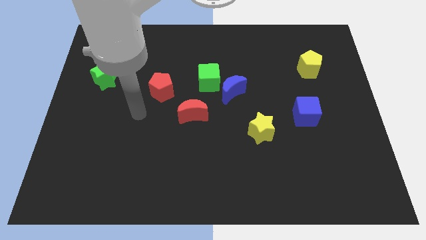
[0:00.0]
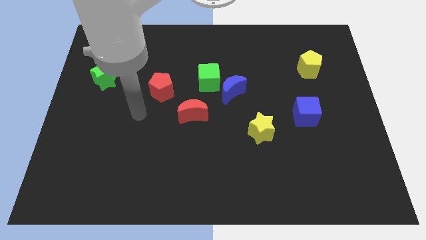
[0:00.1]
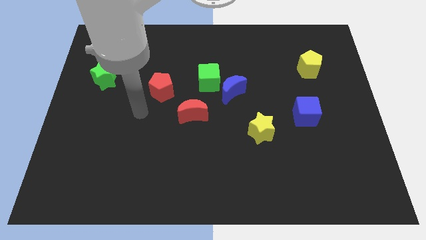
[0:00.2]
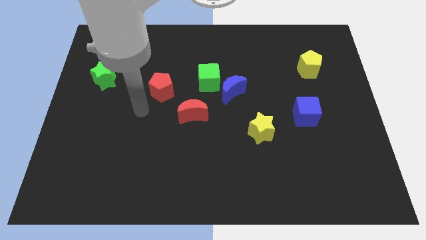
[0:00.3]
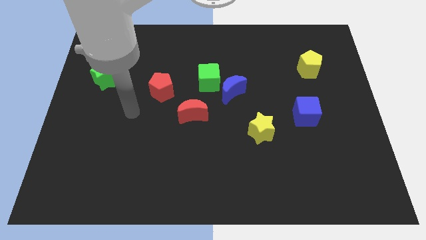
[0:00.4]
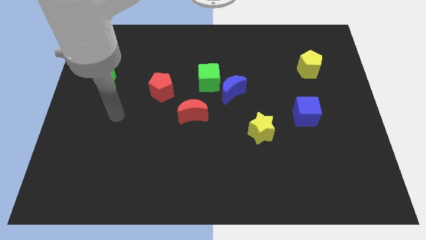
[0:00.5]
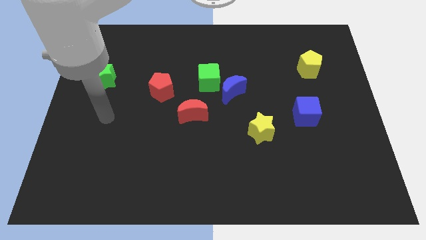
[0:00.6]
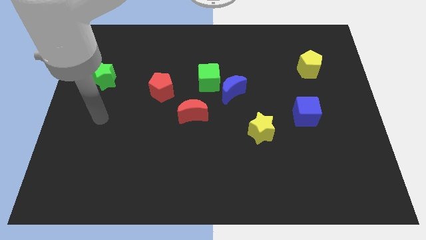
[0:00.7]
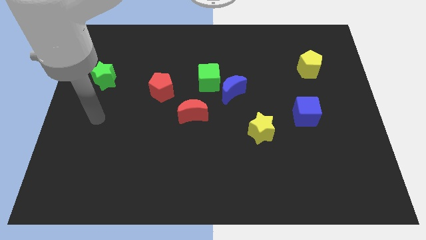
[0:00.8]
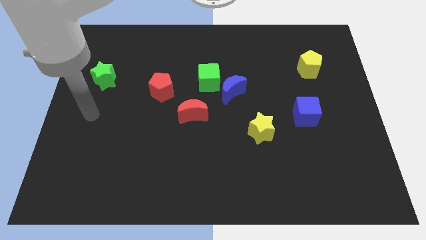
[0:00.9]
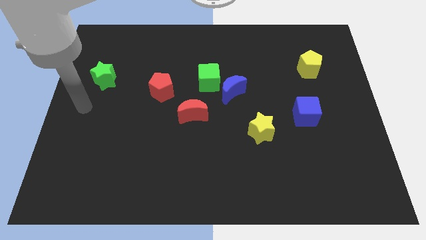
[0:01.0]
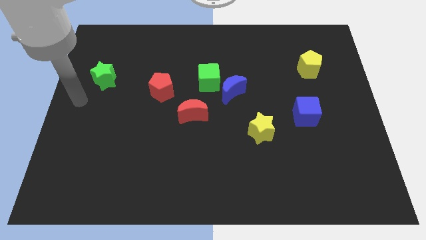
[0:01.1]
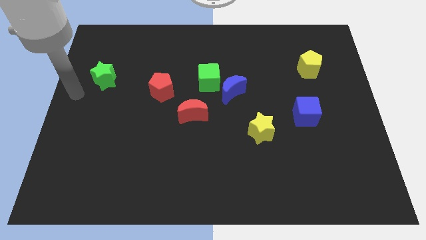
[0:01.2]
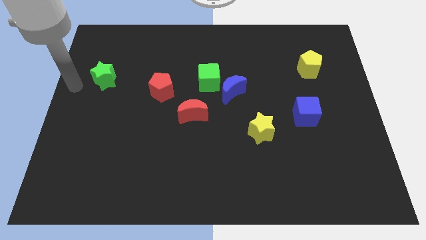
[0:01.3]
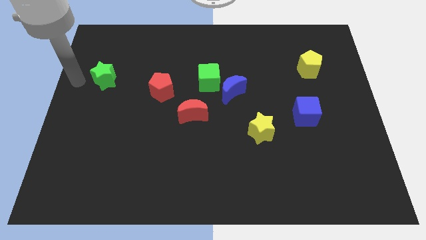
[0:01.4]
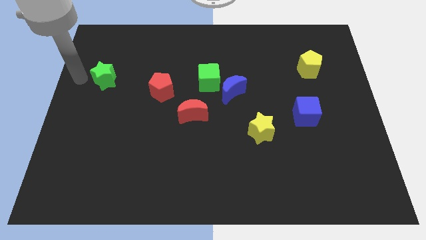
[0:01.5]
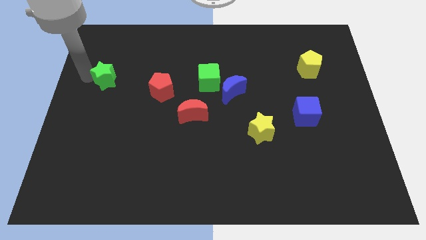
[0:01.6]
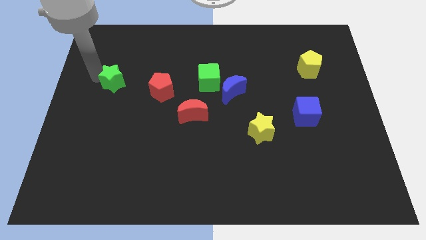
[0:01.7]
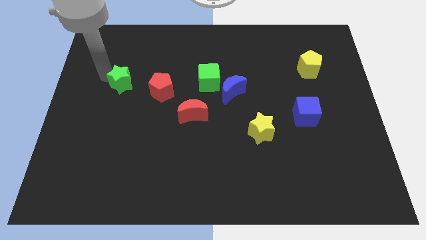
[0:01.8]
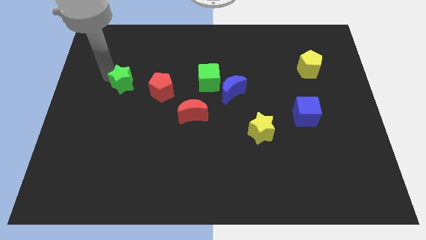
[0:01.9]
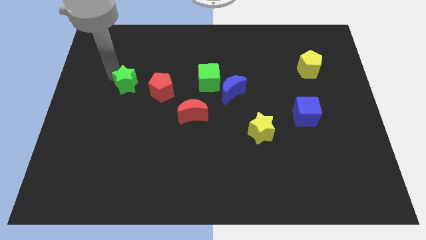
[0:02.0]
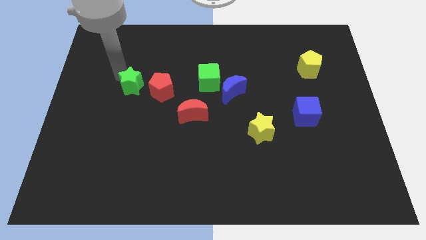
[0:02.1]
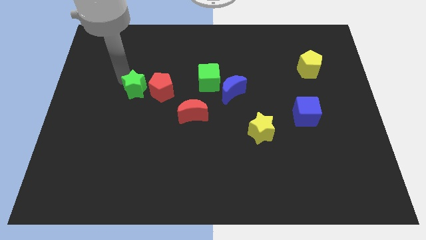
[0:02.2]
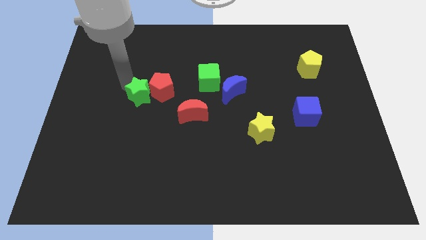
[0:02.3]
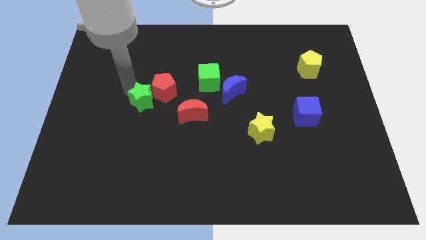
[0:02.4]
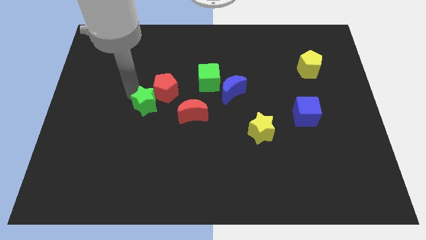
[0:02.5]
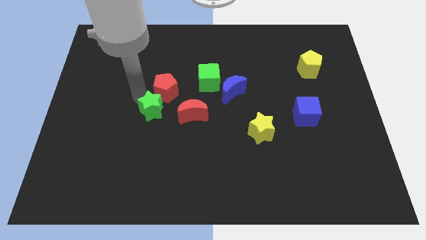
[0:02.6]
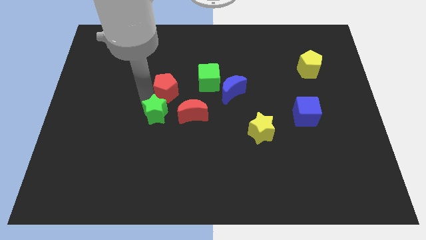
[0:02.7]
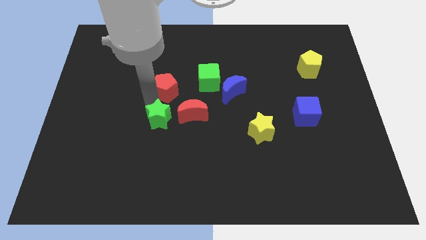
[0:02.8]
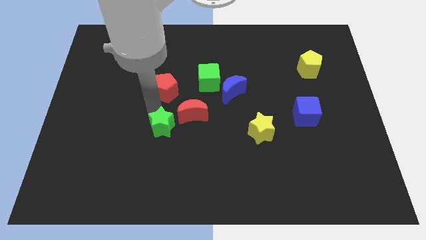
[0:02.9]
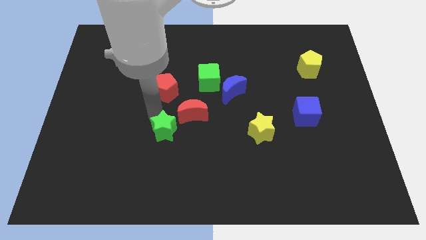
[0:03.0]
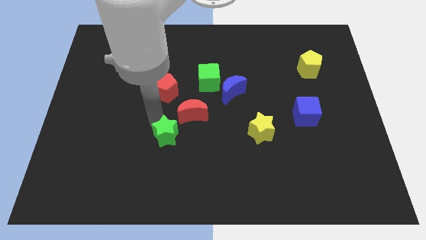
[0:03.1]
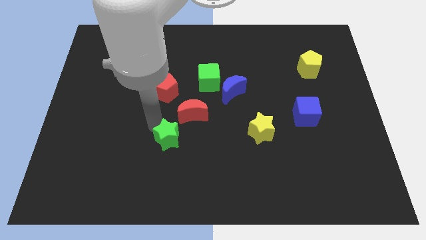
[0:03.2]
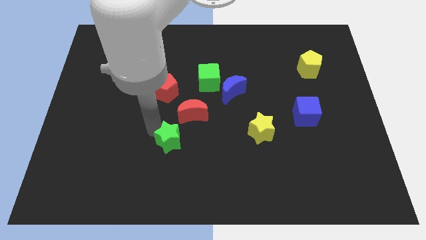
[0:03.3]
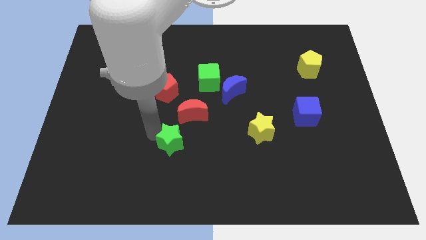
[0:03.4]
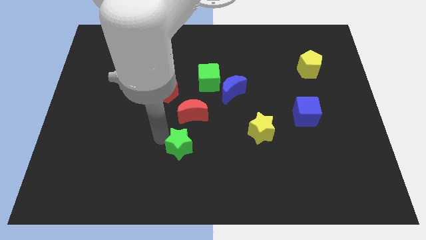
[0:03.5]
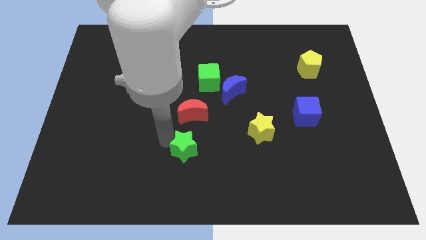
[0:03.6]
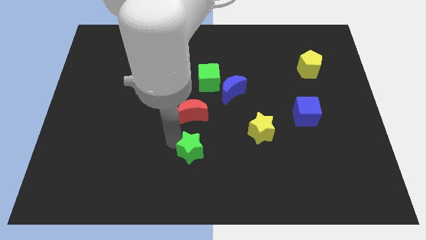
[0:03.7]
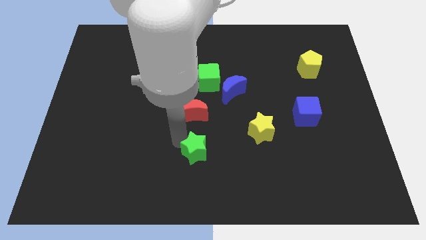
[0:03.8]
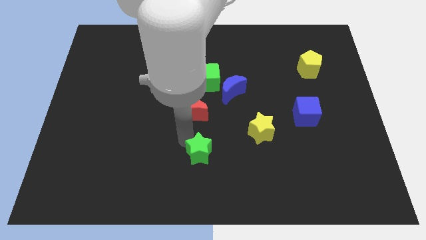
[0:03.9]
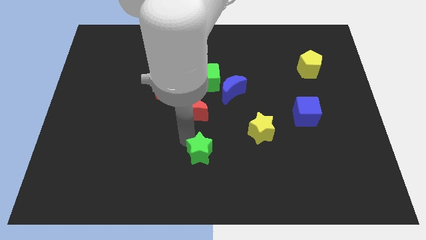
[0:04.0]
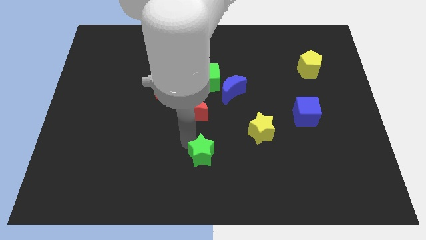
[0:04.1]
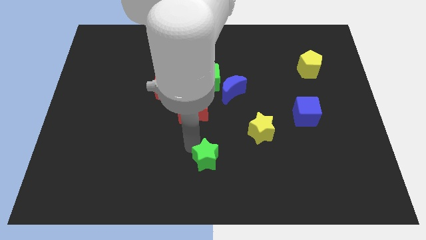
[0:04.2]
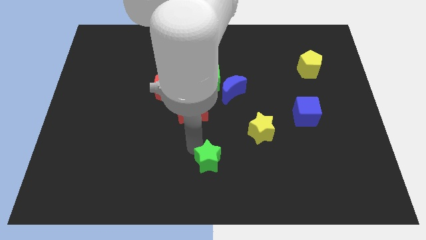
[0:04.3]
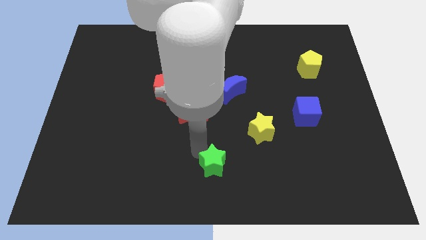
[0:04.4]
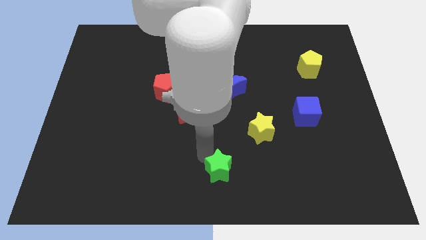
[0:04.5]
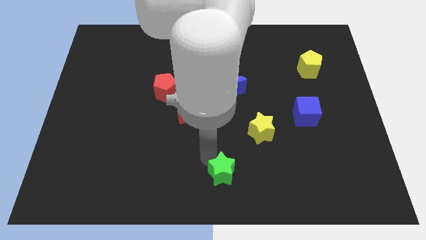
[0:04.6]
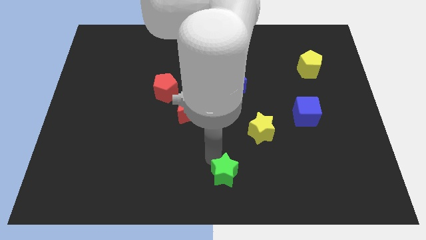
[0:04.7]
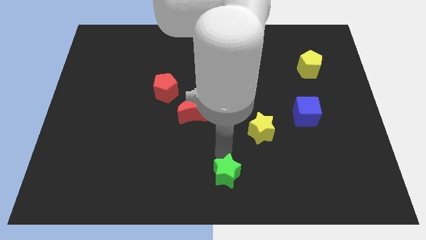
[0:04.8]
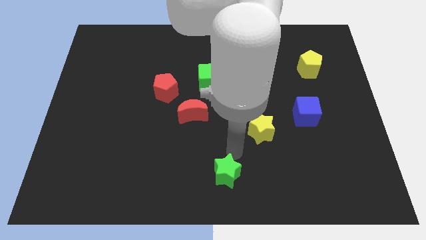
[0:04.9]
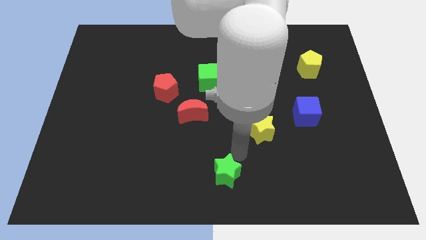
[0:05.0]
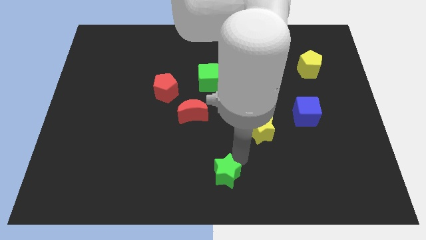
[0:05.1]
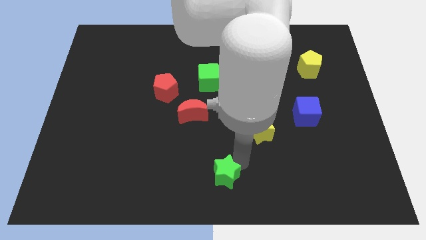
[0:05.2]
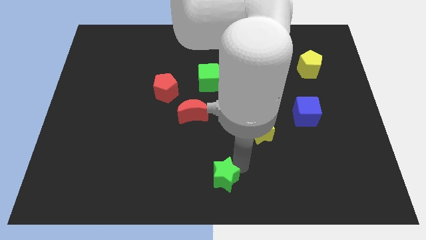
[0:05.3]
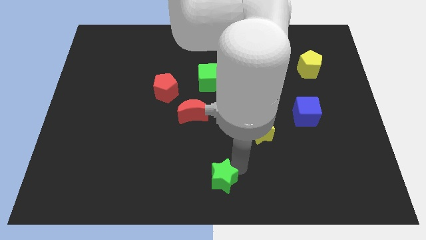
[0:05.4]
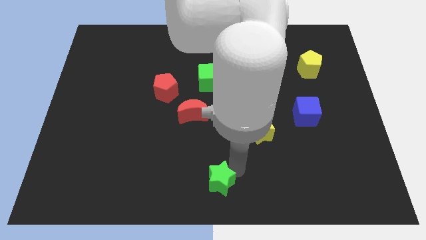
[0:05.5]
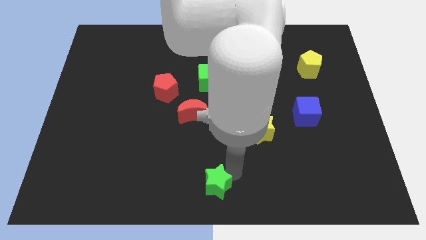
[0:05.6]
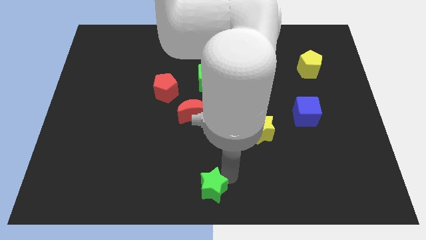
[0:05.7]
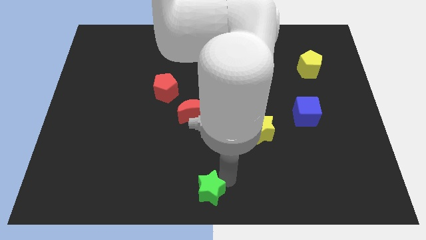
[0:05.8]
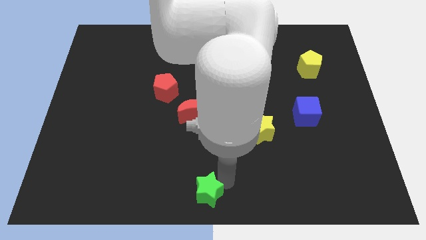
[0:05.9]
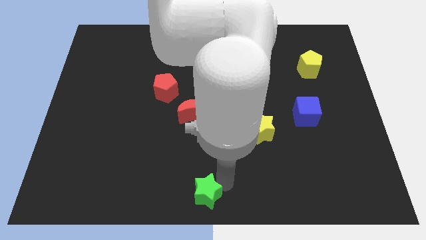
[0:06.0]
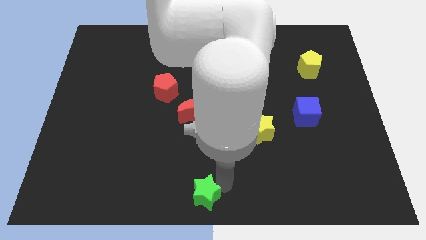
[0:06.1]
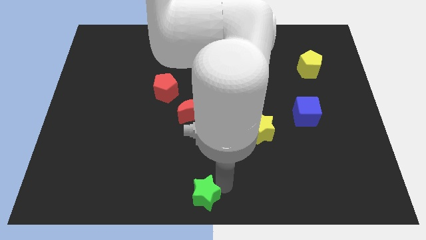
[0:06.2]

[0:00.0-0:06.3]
push the green star to the bottom center of the board

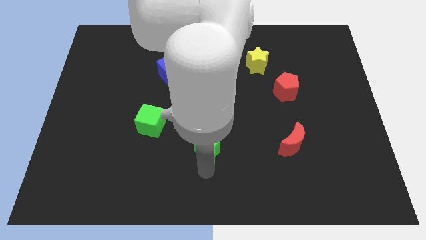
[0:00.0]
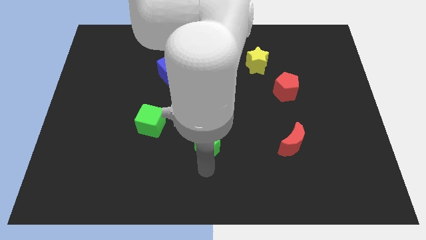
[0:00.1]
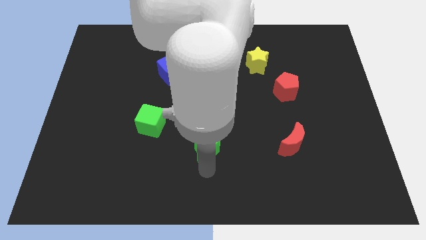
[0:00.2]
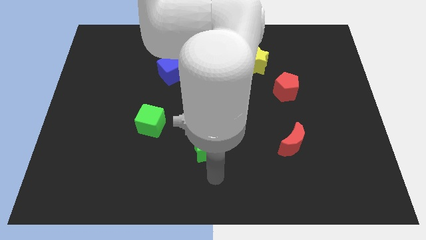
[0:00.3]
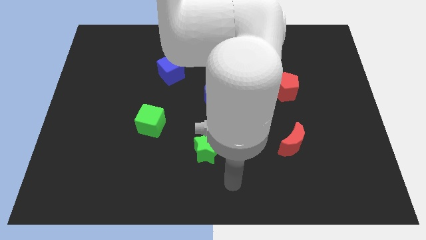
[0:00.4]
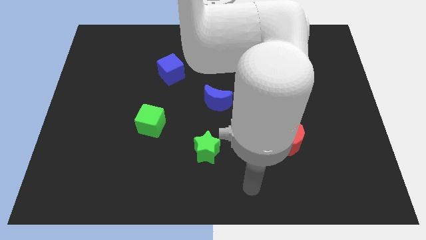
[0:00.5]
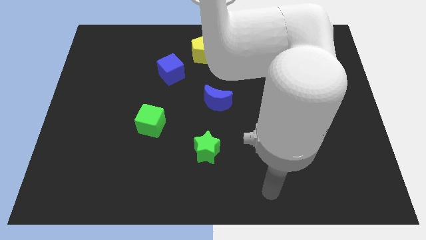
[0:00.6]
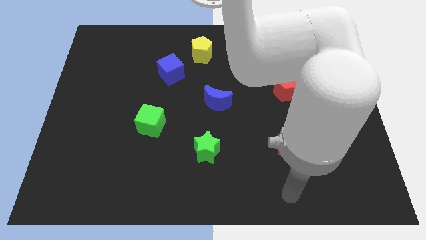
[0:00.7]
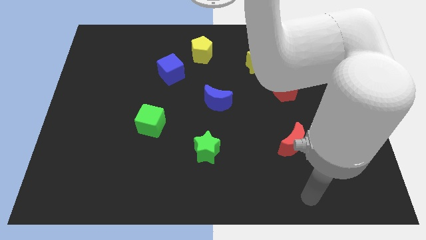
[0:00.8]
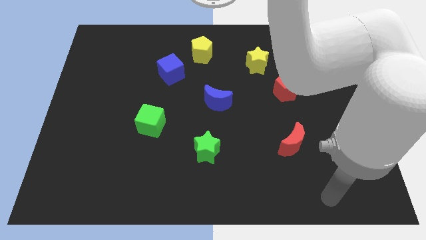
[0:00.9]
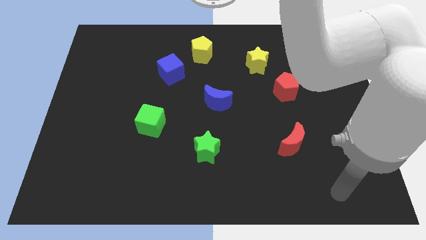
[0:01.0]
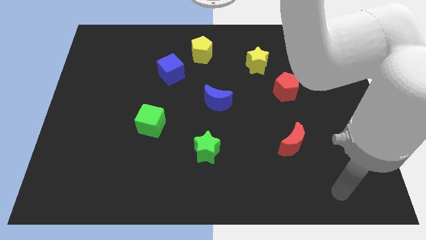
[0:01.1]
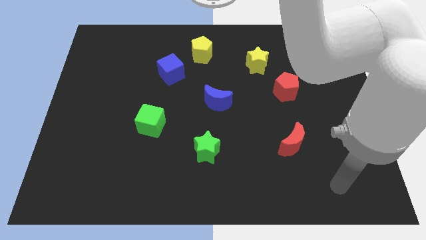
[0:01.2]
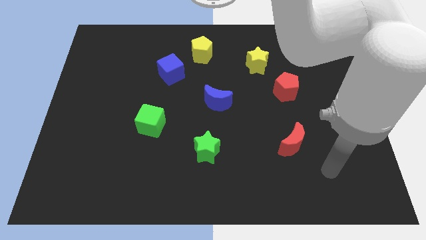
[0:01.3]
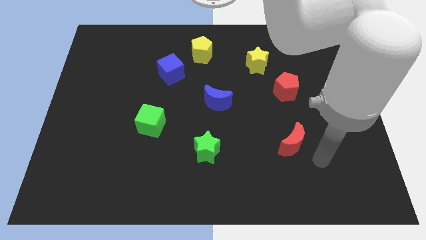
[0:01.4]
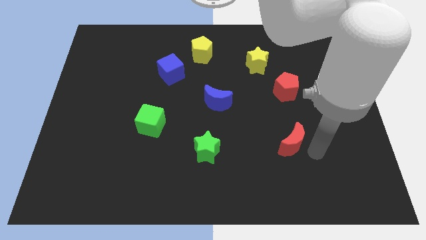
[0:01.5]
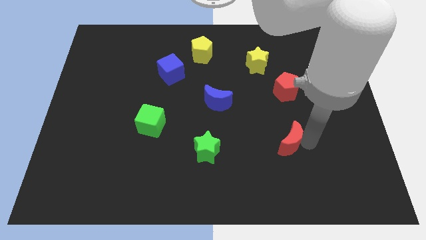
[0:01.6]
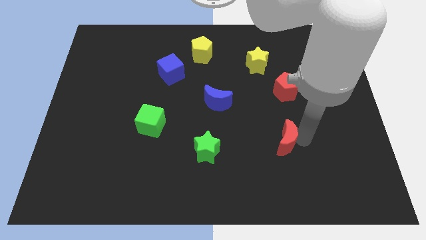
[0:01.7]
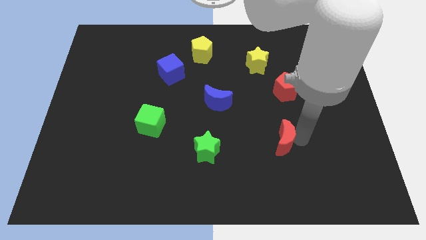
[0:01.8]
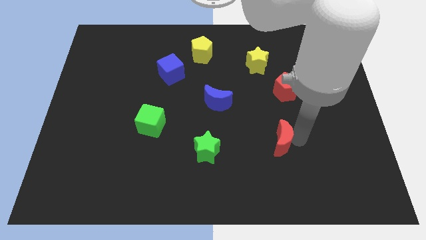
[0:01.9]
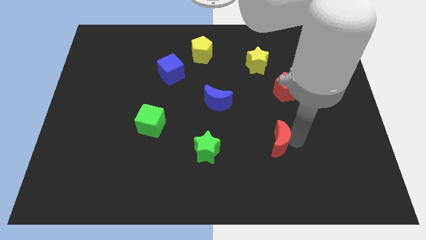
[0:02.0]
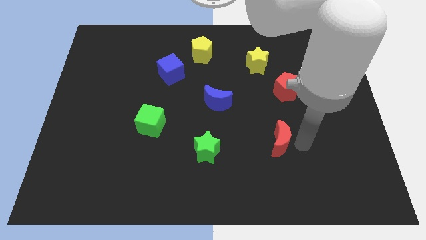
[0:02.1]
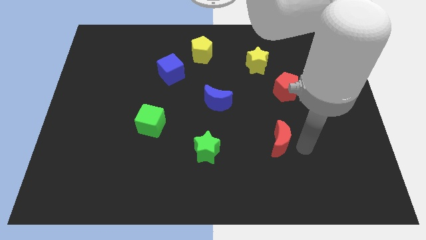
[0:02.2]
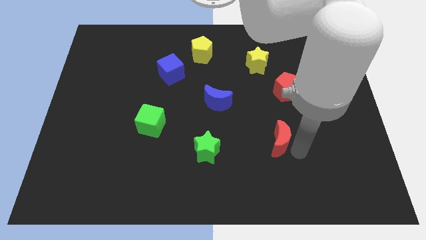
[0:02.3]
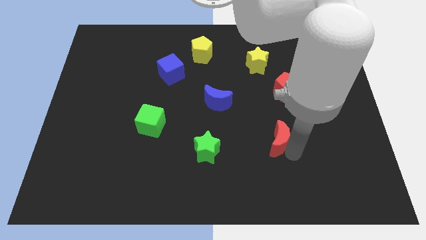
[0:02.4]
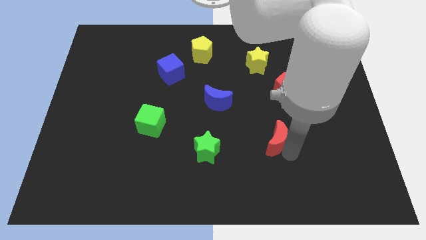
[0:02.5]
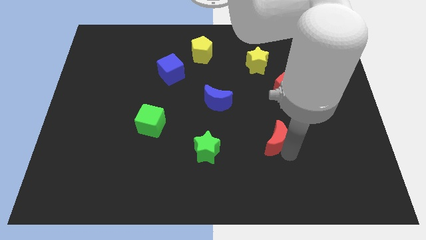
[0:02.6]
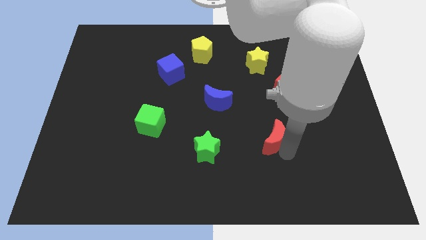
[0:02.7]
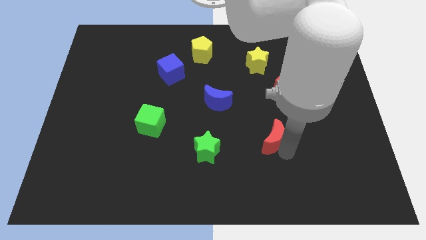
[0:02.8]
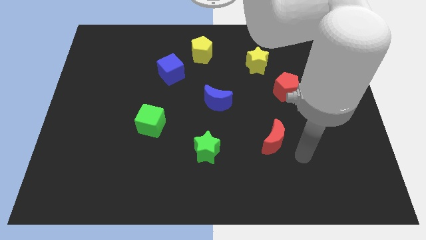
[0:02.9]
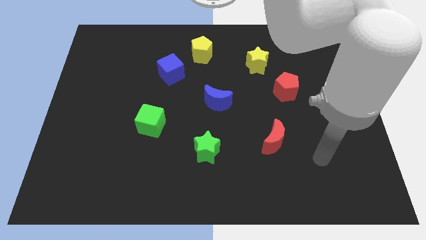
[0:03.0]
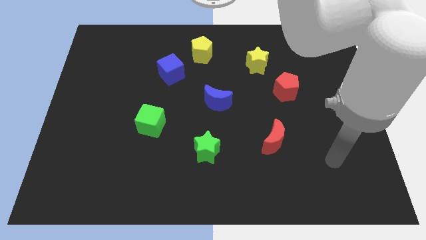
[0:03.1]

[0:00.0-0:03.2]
place the red moon diagonally at the bottom right of the blue moon
